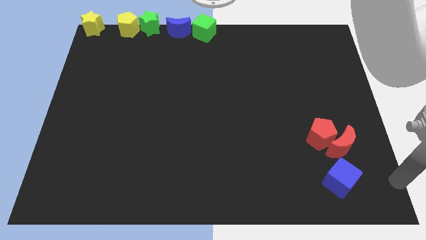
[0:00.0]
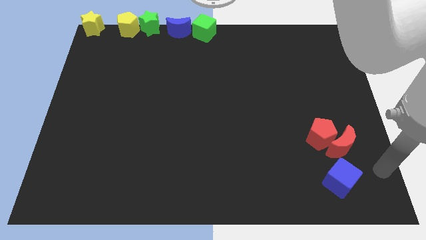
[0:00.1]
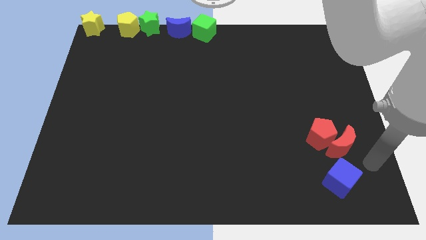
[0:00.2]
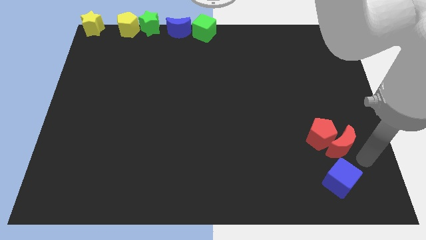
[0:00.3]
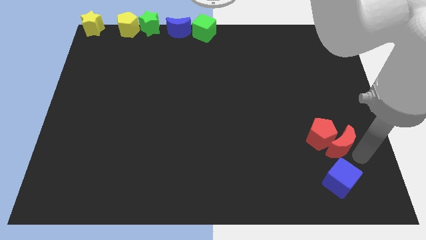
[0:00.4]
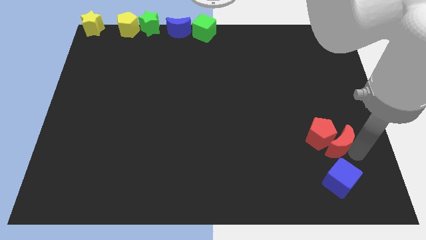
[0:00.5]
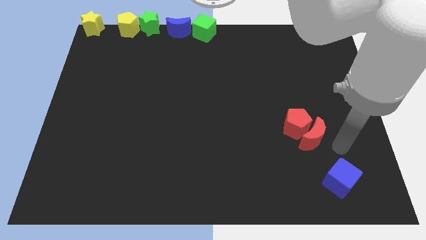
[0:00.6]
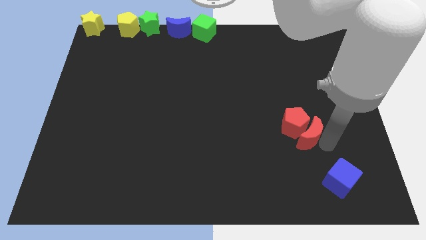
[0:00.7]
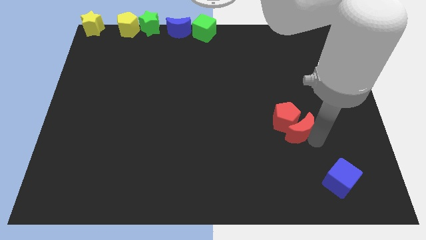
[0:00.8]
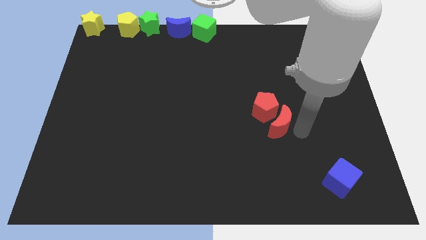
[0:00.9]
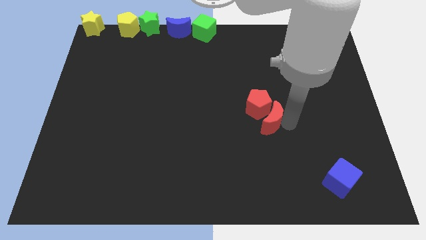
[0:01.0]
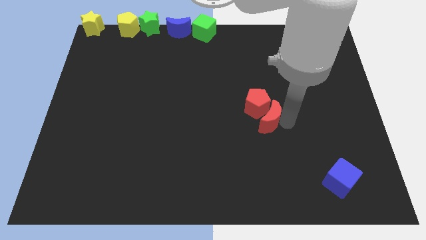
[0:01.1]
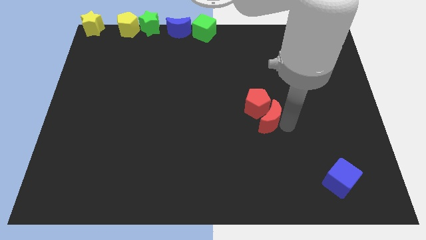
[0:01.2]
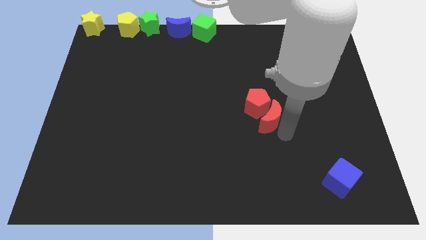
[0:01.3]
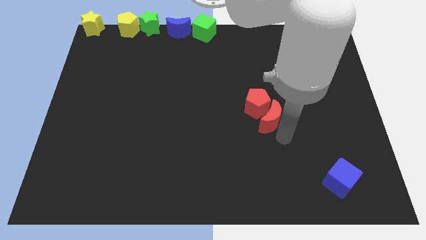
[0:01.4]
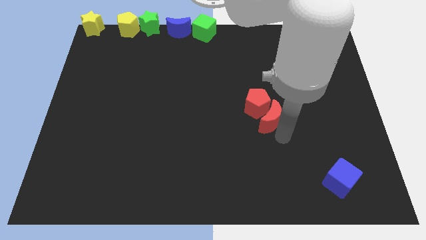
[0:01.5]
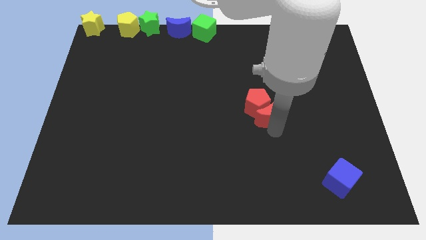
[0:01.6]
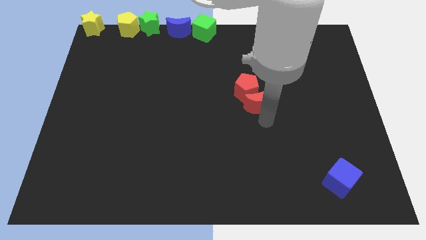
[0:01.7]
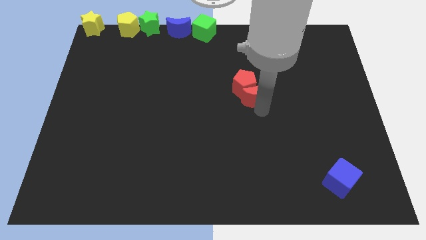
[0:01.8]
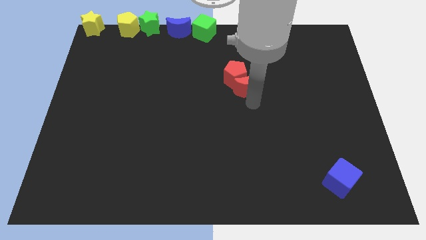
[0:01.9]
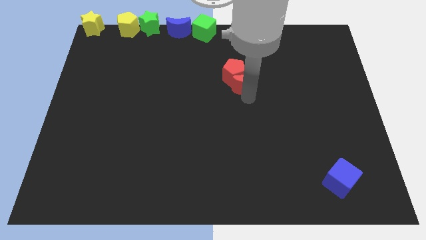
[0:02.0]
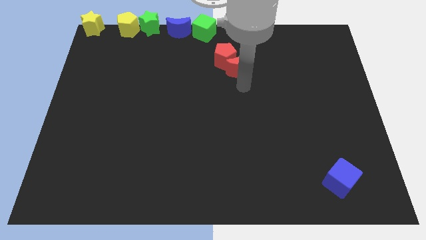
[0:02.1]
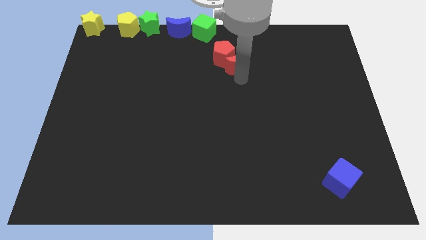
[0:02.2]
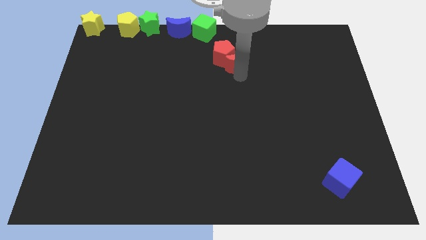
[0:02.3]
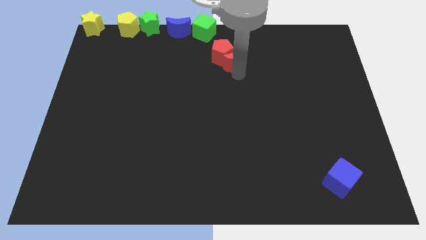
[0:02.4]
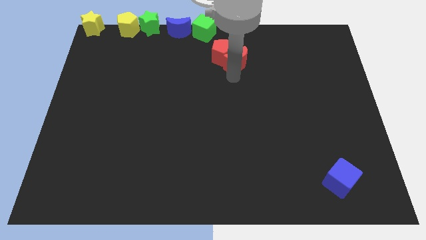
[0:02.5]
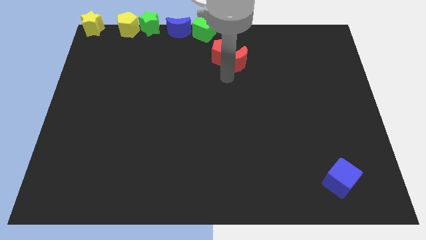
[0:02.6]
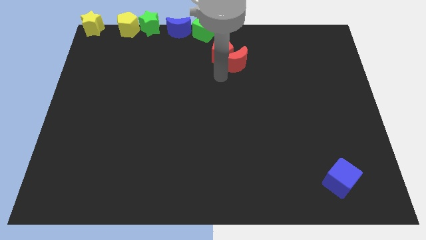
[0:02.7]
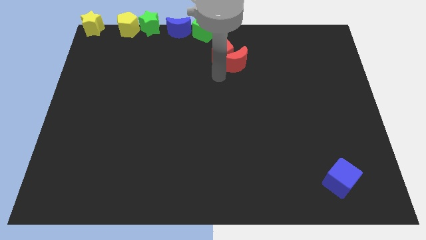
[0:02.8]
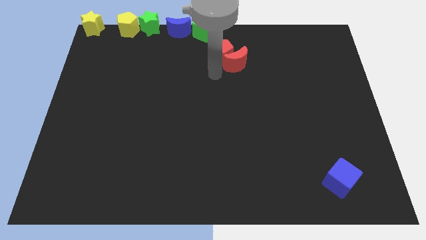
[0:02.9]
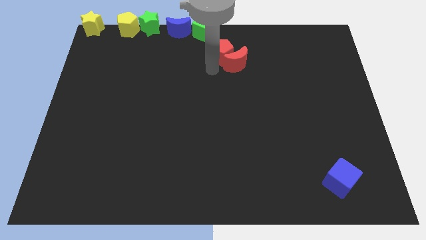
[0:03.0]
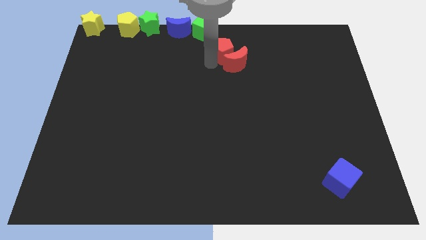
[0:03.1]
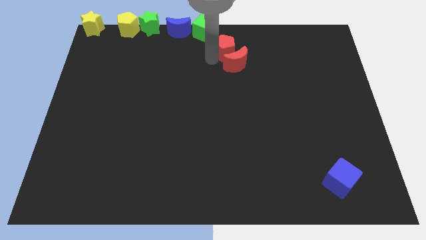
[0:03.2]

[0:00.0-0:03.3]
push the red blocks to the top center of the board

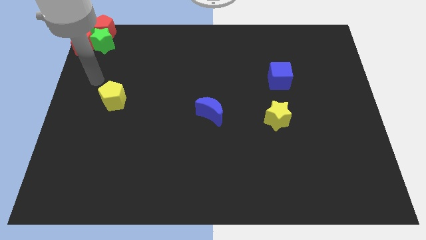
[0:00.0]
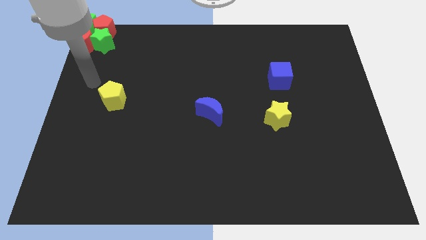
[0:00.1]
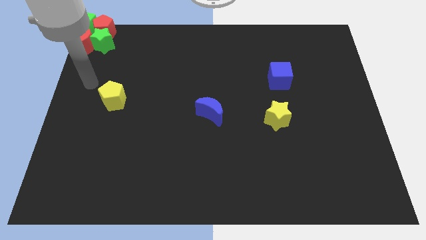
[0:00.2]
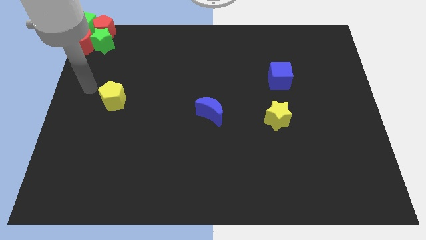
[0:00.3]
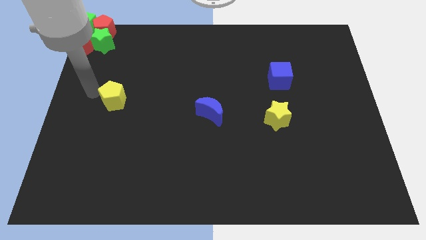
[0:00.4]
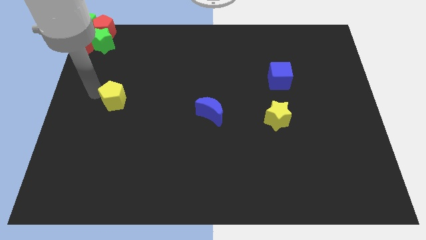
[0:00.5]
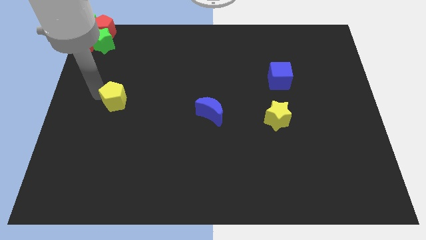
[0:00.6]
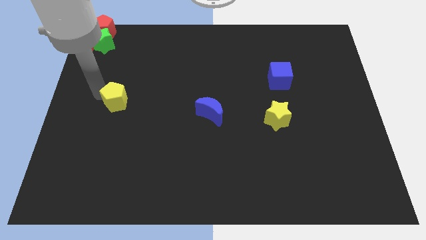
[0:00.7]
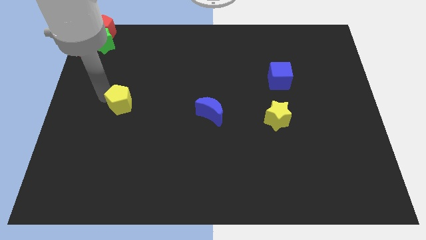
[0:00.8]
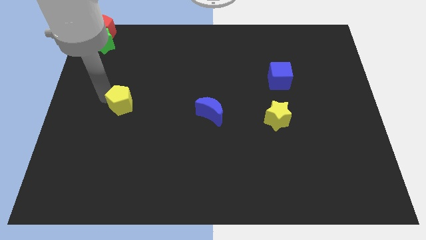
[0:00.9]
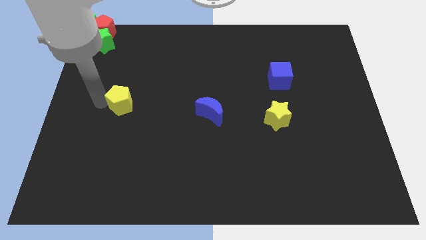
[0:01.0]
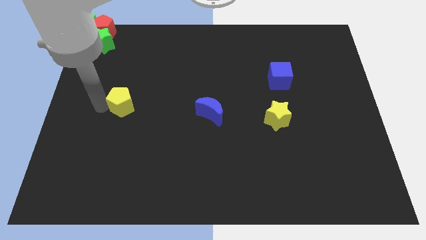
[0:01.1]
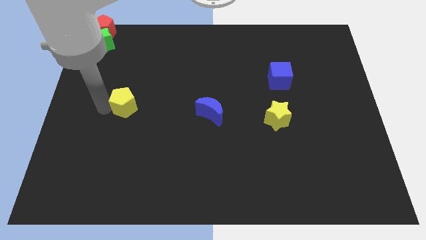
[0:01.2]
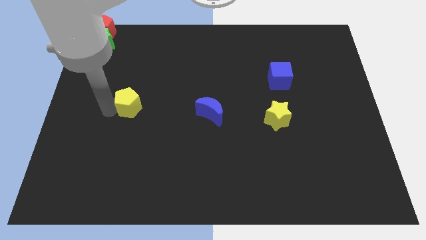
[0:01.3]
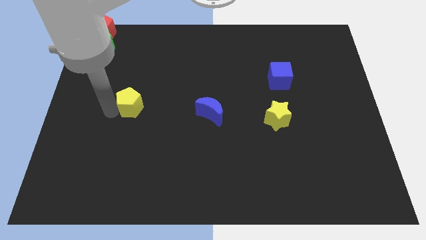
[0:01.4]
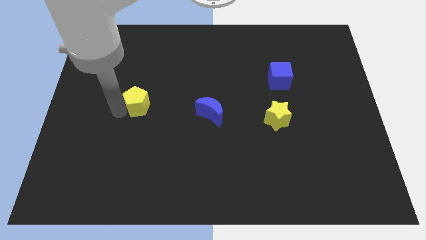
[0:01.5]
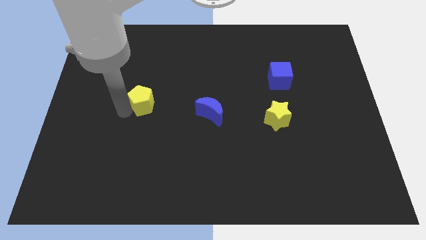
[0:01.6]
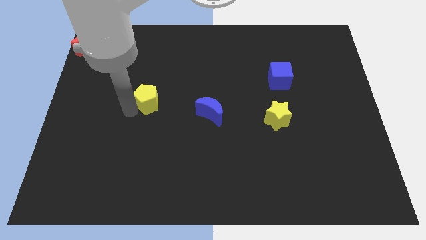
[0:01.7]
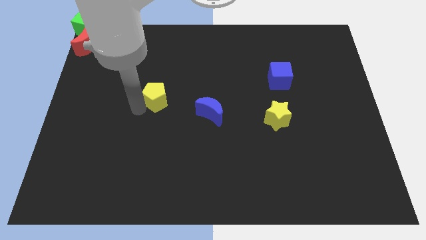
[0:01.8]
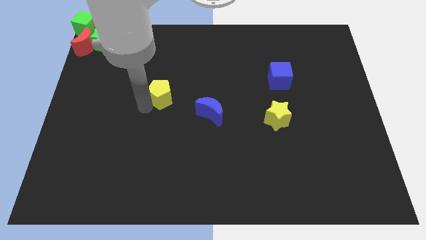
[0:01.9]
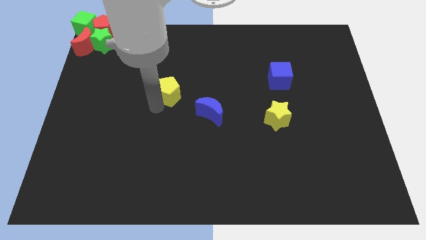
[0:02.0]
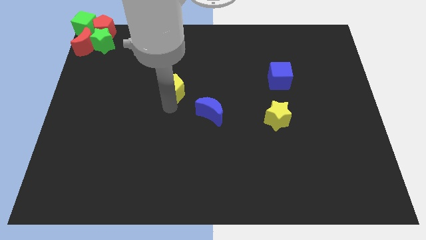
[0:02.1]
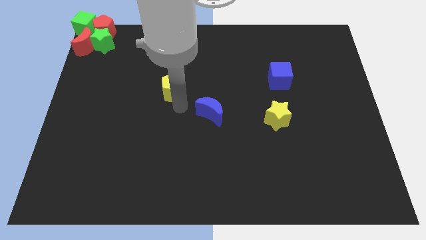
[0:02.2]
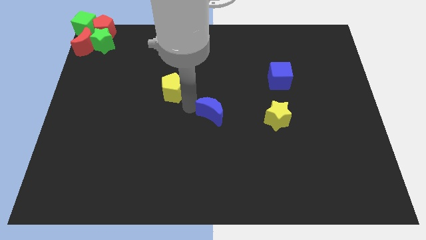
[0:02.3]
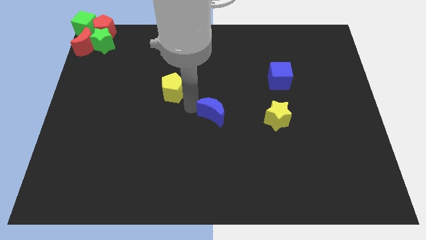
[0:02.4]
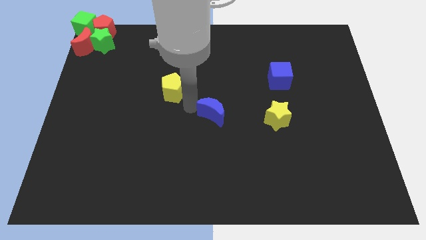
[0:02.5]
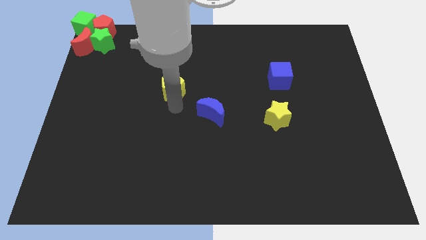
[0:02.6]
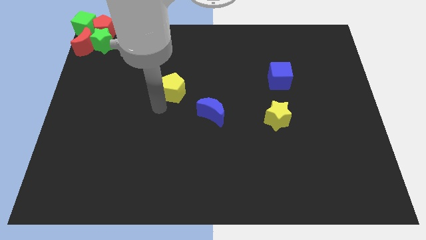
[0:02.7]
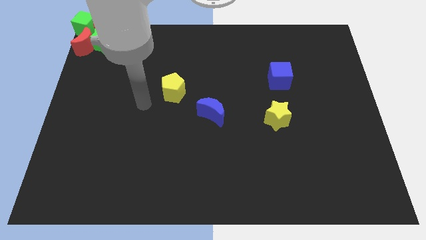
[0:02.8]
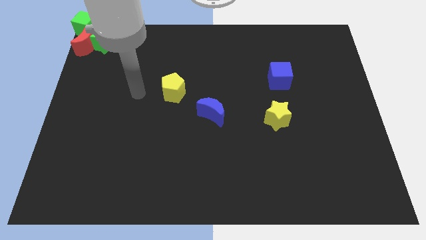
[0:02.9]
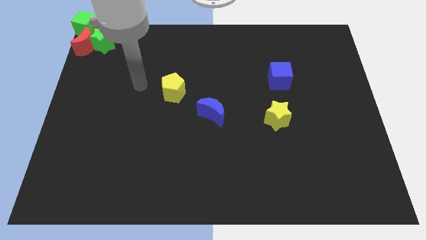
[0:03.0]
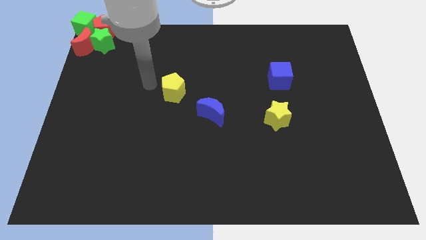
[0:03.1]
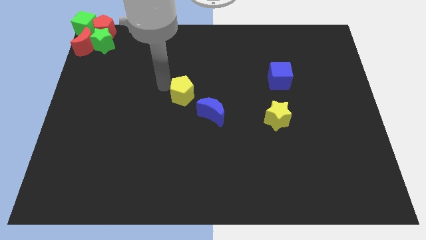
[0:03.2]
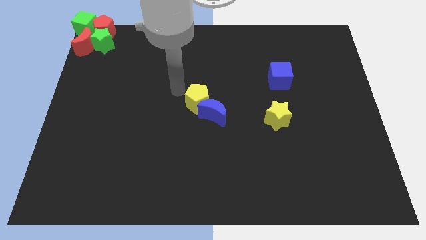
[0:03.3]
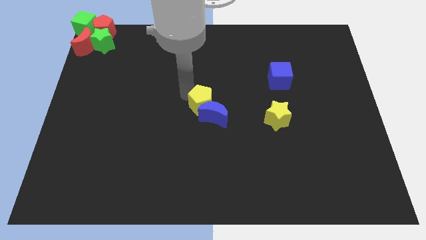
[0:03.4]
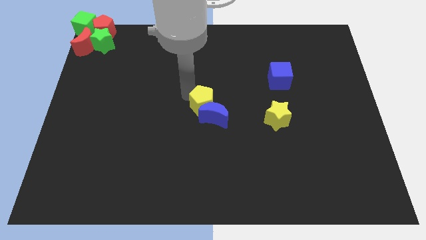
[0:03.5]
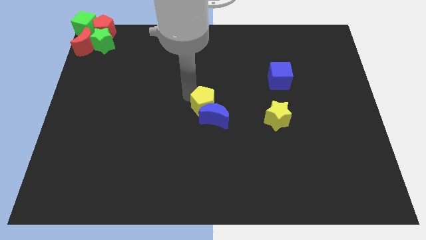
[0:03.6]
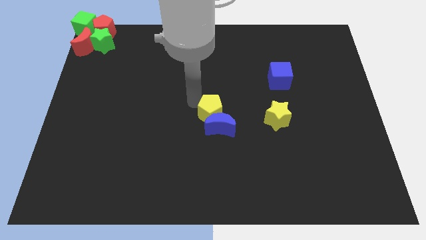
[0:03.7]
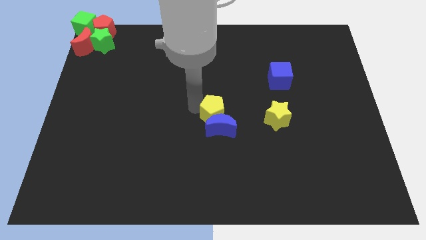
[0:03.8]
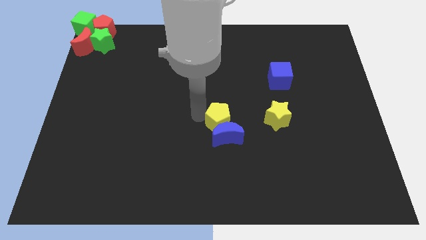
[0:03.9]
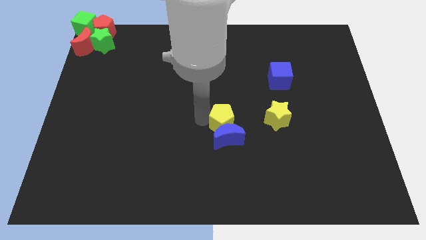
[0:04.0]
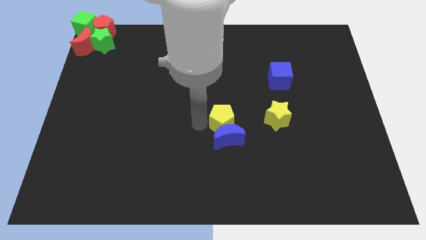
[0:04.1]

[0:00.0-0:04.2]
push the yellow pentagon into the blue crescent

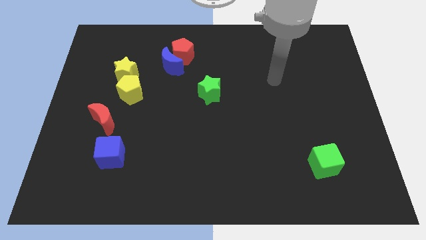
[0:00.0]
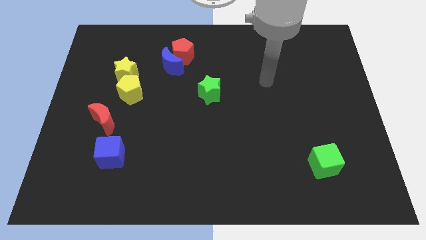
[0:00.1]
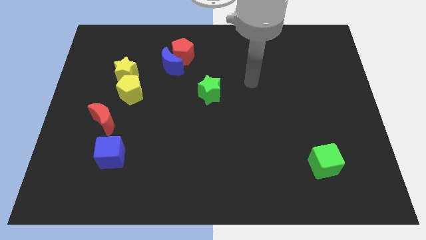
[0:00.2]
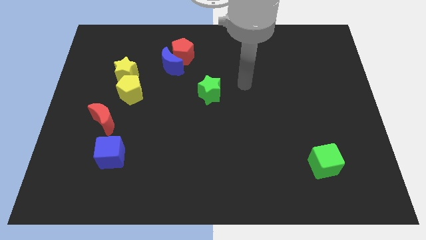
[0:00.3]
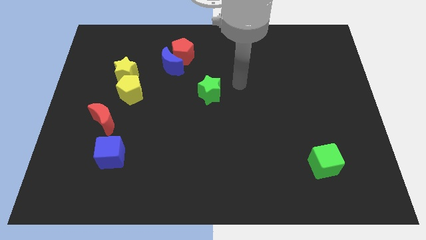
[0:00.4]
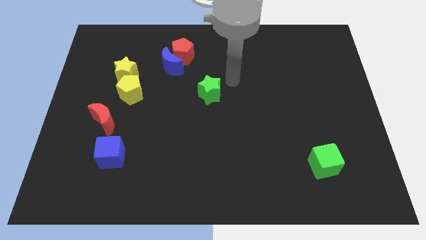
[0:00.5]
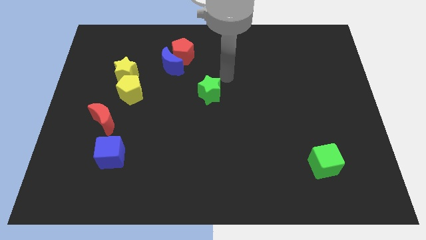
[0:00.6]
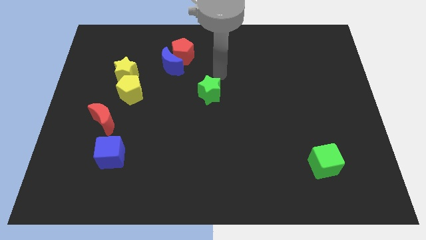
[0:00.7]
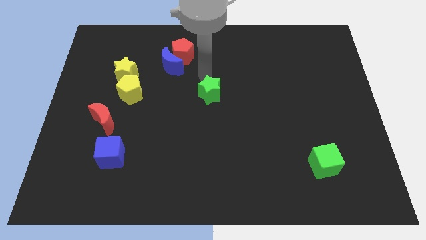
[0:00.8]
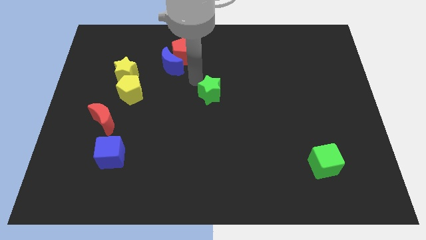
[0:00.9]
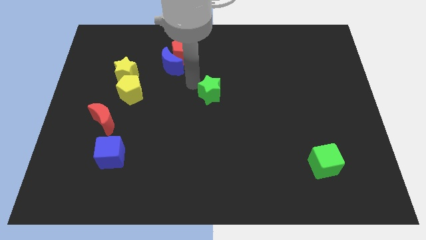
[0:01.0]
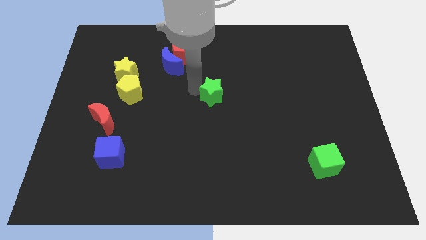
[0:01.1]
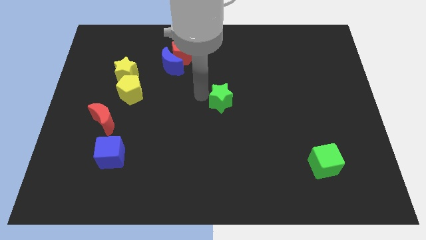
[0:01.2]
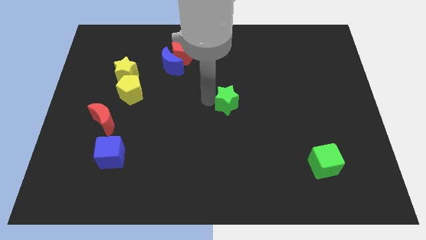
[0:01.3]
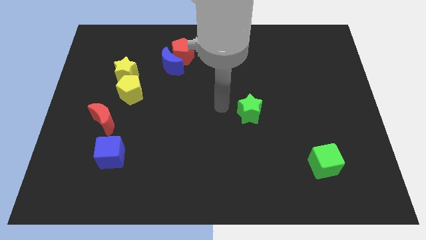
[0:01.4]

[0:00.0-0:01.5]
tap on the green star
